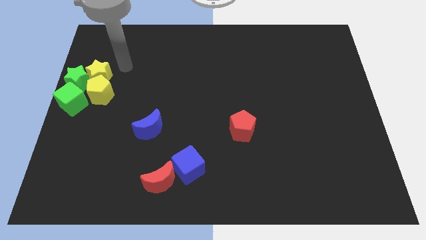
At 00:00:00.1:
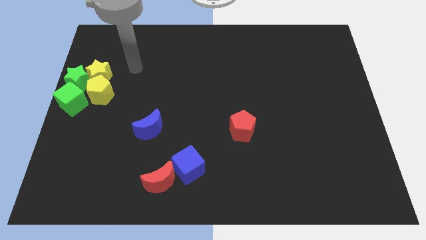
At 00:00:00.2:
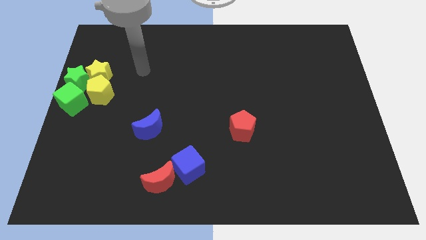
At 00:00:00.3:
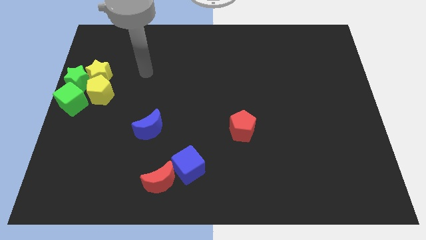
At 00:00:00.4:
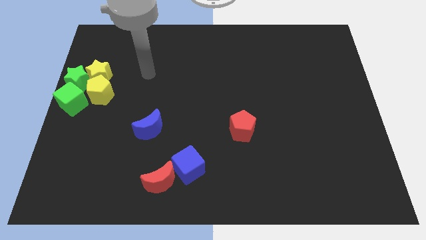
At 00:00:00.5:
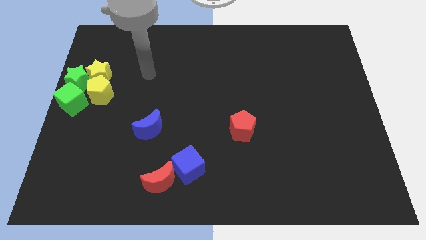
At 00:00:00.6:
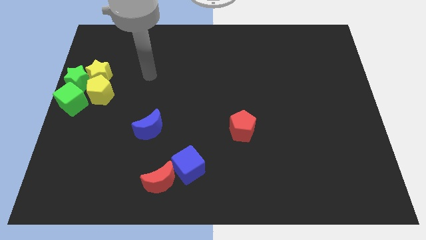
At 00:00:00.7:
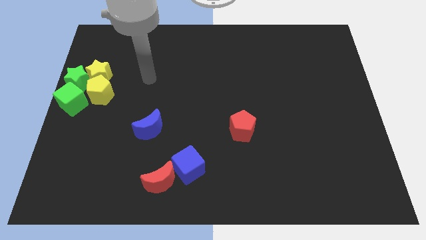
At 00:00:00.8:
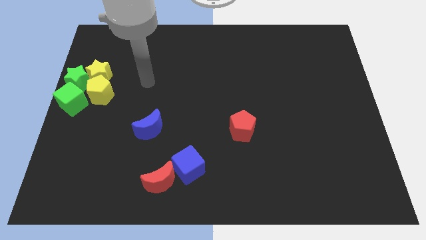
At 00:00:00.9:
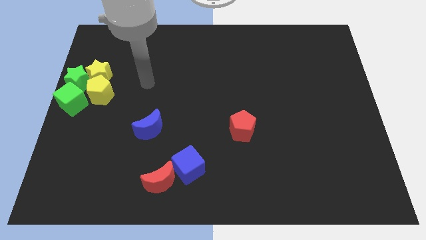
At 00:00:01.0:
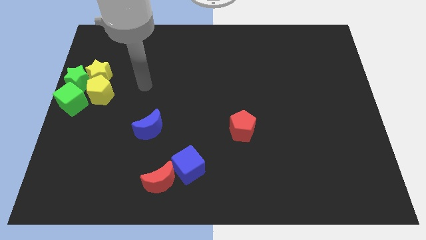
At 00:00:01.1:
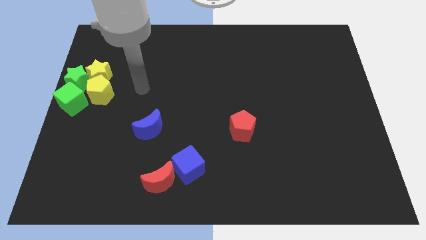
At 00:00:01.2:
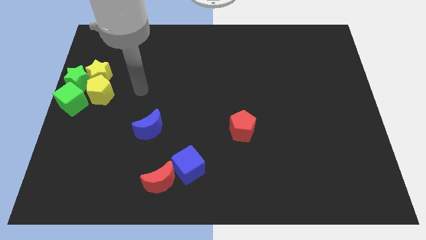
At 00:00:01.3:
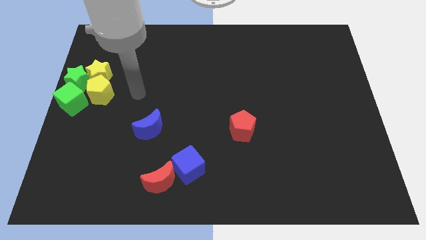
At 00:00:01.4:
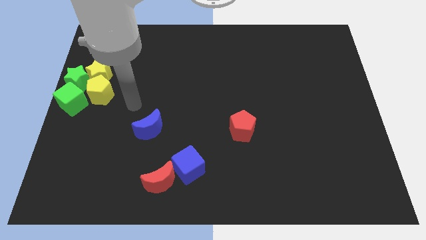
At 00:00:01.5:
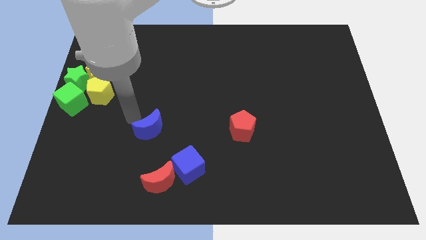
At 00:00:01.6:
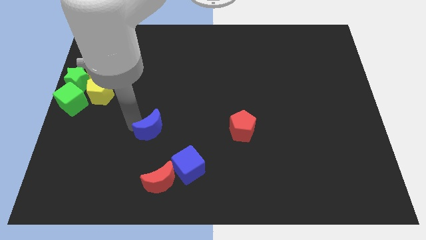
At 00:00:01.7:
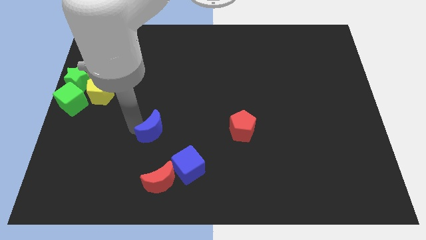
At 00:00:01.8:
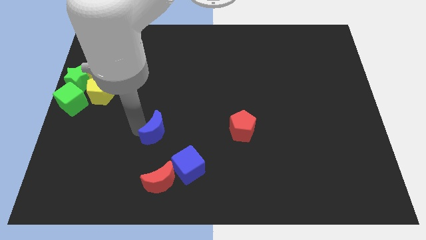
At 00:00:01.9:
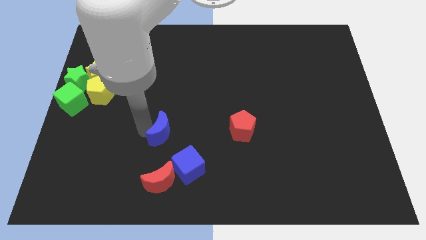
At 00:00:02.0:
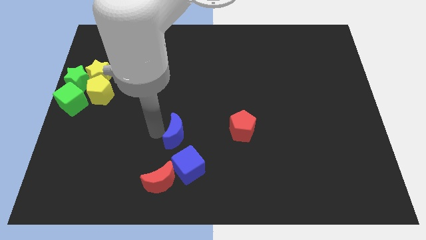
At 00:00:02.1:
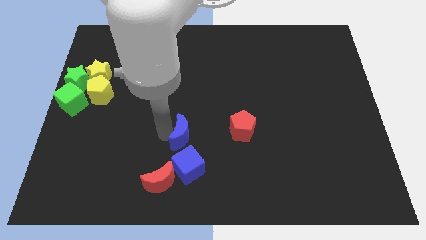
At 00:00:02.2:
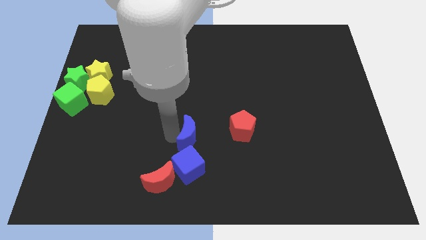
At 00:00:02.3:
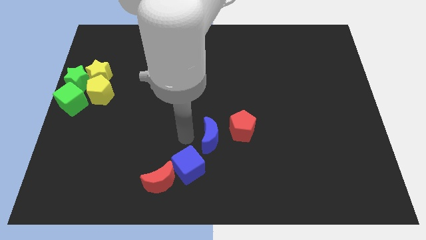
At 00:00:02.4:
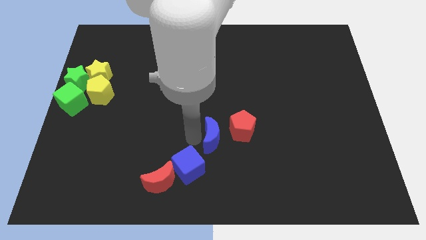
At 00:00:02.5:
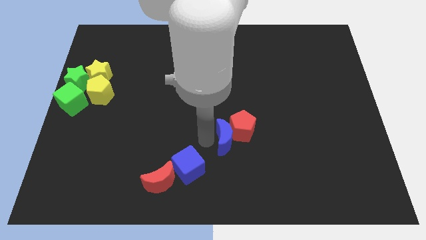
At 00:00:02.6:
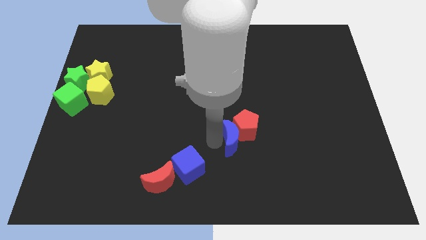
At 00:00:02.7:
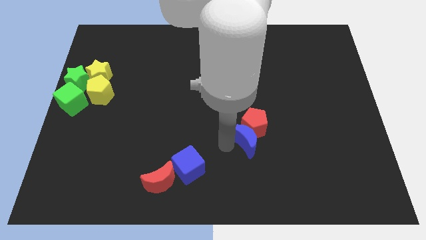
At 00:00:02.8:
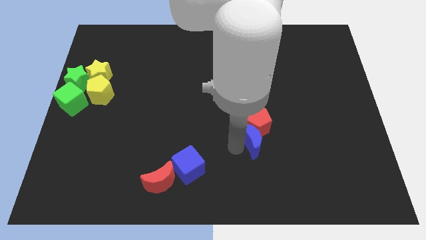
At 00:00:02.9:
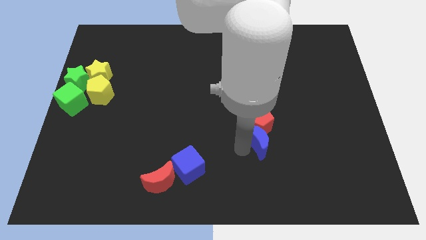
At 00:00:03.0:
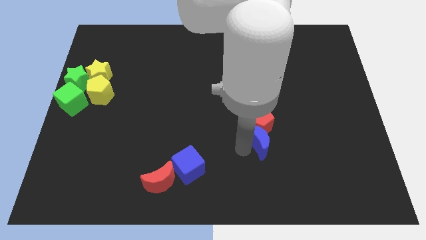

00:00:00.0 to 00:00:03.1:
place blue moon to the bottom of red pentagon

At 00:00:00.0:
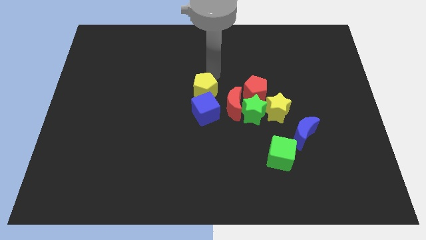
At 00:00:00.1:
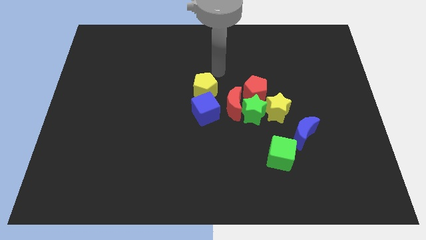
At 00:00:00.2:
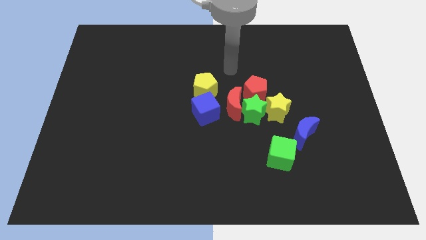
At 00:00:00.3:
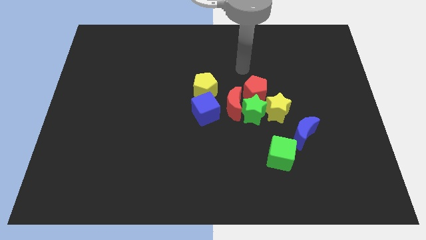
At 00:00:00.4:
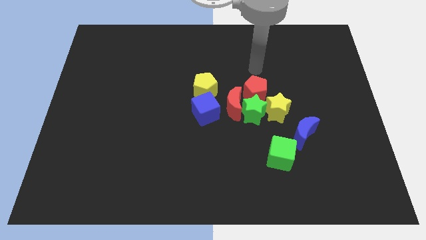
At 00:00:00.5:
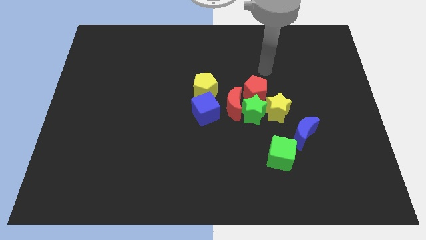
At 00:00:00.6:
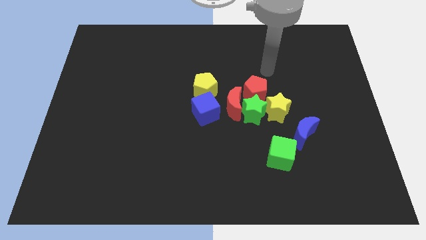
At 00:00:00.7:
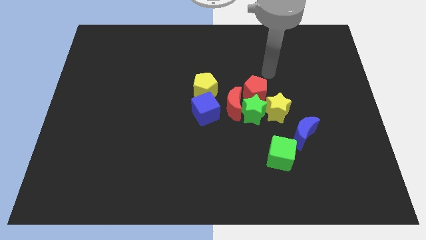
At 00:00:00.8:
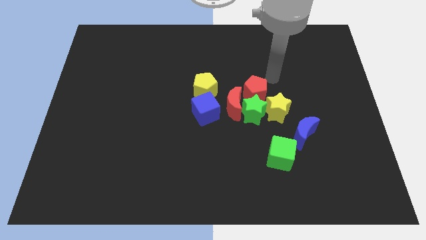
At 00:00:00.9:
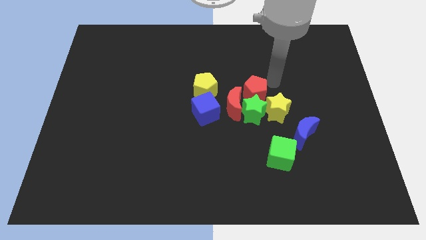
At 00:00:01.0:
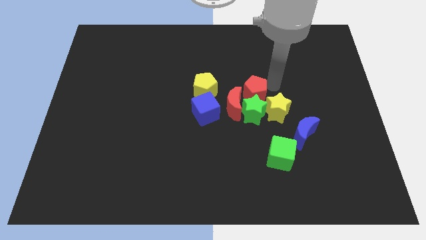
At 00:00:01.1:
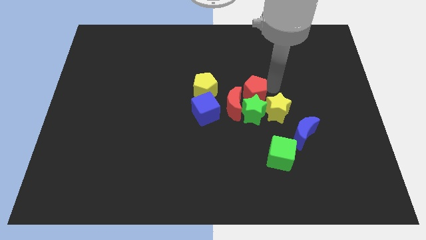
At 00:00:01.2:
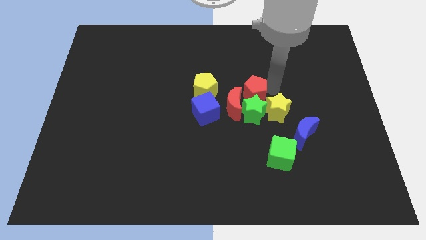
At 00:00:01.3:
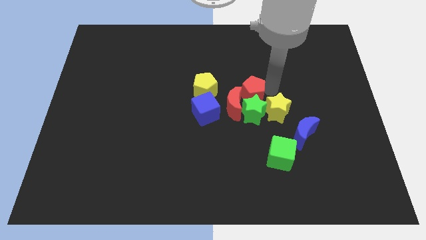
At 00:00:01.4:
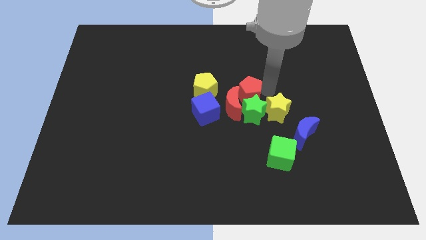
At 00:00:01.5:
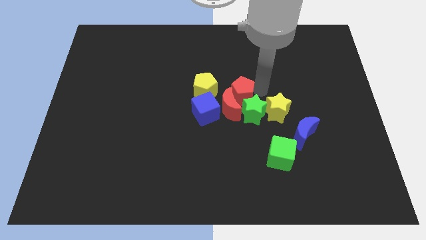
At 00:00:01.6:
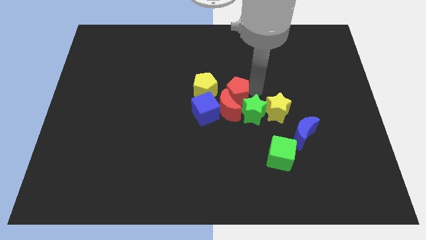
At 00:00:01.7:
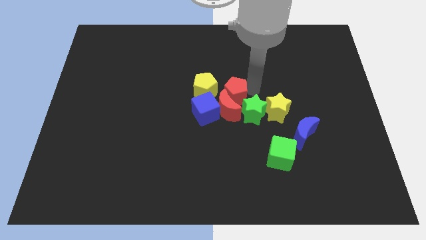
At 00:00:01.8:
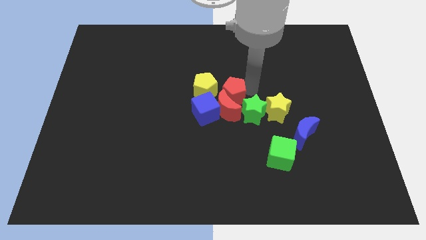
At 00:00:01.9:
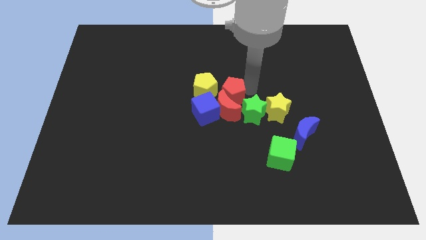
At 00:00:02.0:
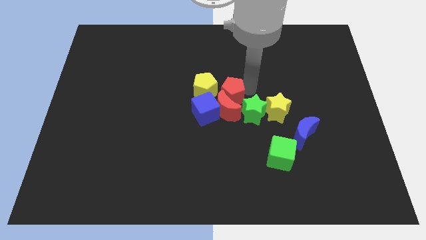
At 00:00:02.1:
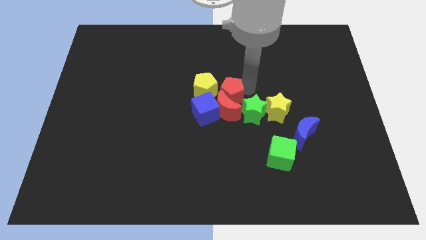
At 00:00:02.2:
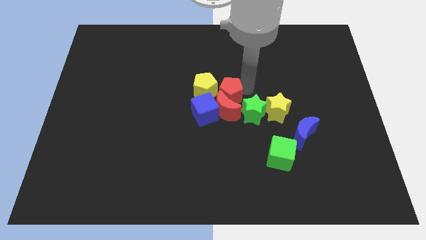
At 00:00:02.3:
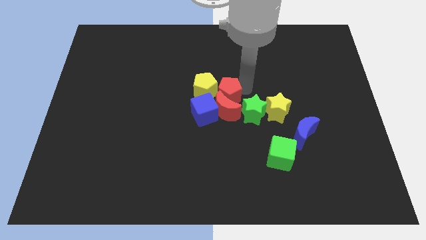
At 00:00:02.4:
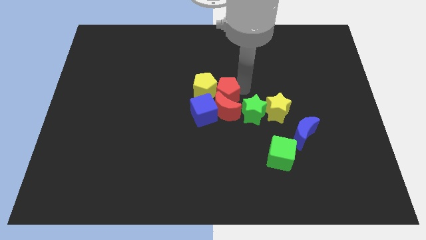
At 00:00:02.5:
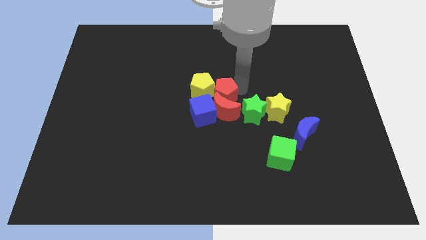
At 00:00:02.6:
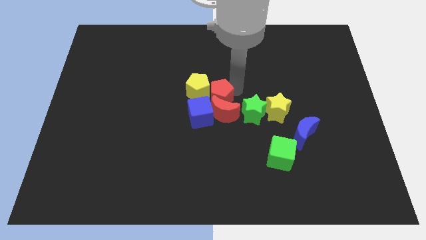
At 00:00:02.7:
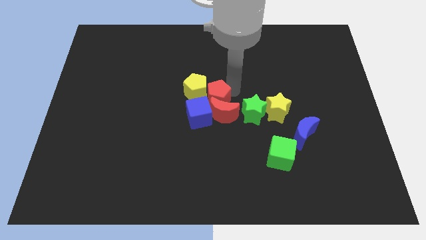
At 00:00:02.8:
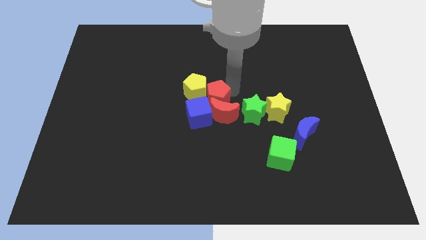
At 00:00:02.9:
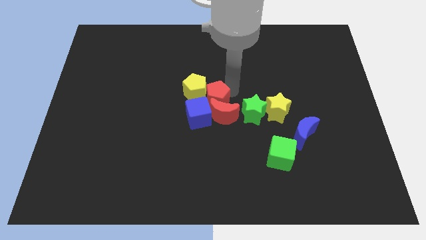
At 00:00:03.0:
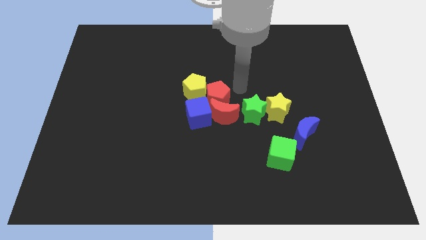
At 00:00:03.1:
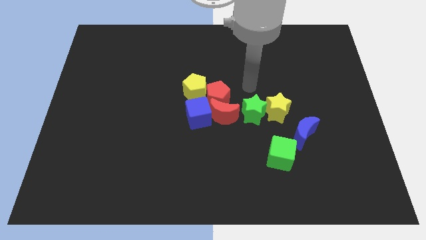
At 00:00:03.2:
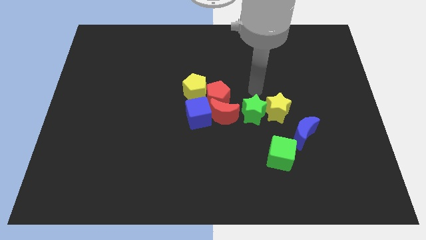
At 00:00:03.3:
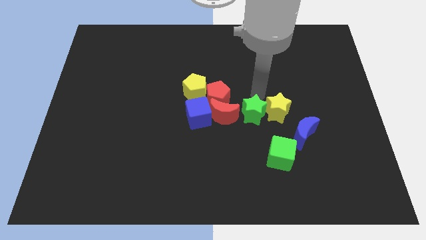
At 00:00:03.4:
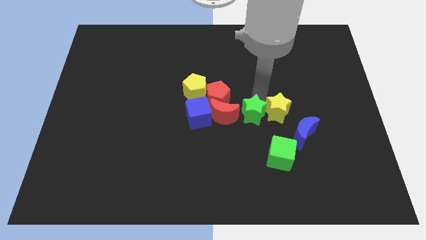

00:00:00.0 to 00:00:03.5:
push the red pentagon into the yellow pentagon

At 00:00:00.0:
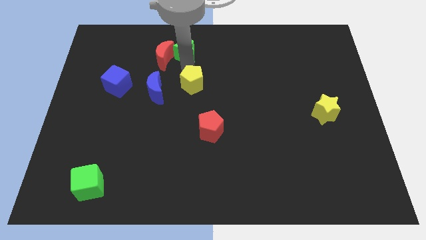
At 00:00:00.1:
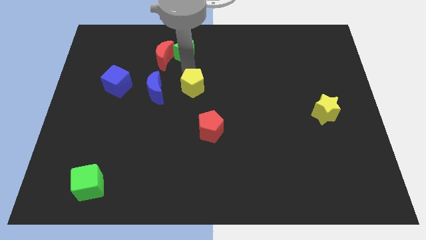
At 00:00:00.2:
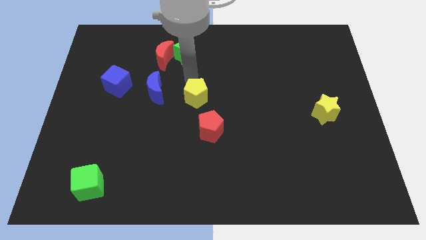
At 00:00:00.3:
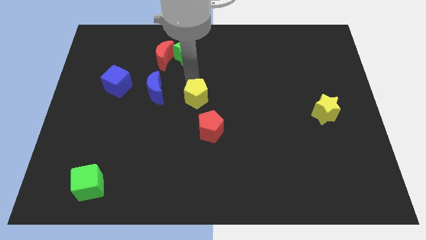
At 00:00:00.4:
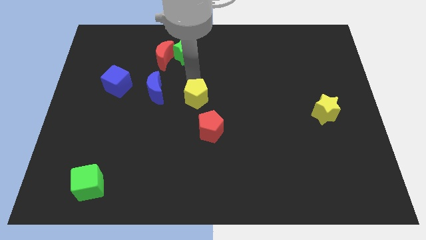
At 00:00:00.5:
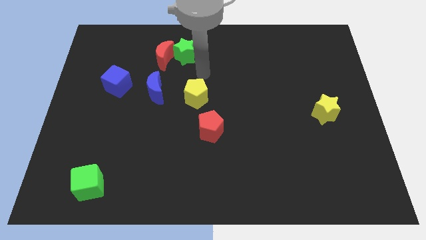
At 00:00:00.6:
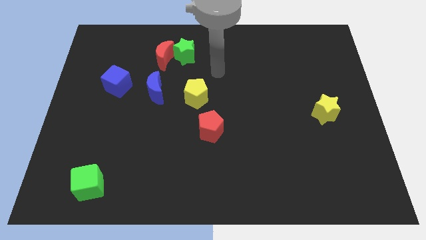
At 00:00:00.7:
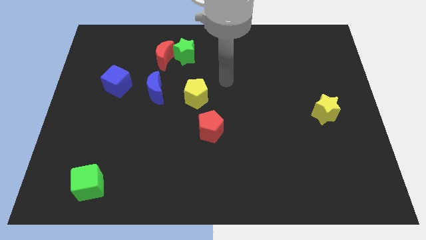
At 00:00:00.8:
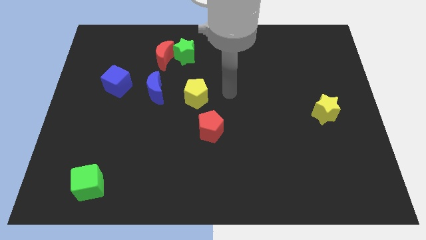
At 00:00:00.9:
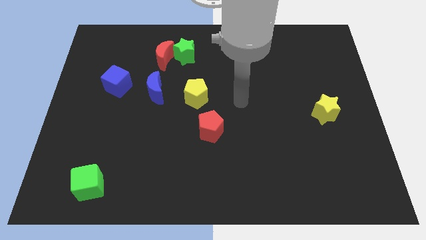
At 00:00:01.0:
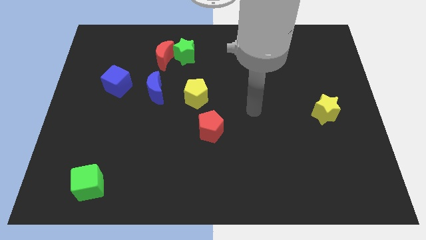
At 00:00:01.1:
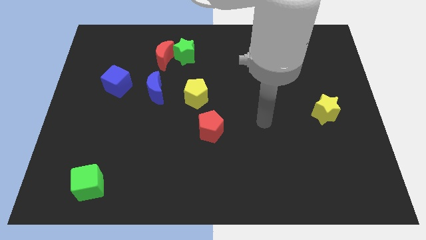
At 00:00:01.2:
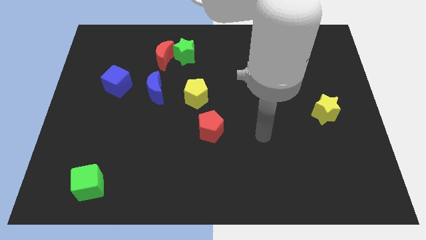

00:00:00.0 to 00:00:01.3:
put the yellow pentagon at the right side of the blue crescent

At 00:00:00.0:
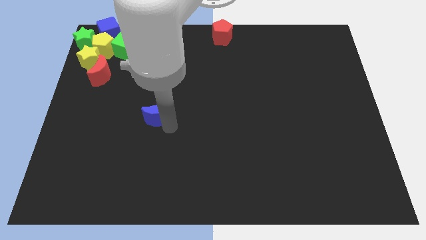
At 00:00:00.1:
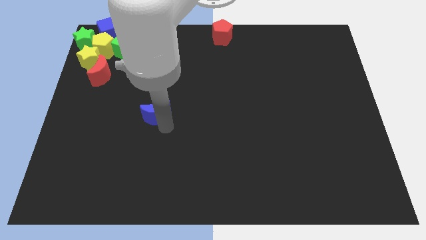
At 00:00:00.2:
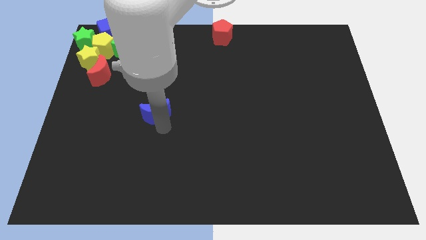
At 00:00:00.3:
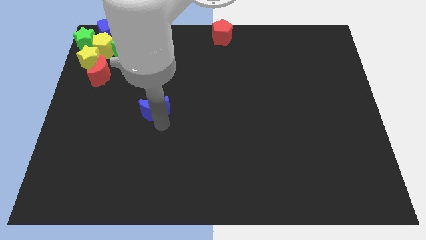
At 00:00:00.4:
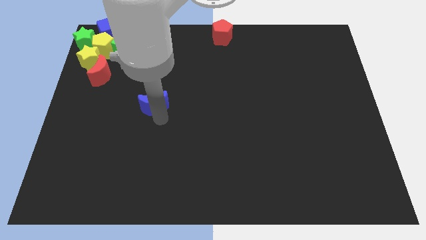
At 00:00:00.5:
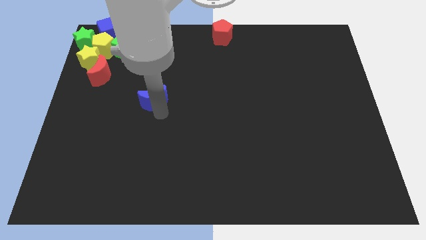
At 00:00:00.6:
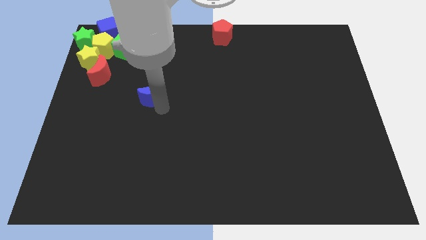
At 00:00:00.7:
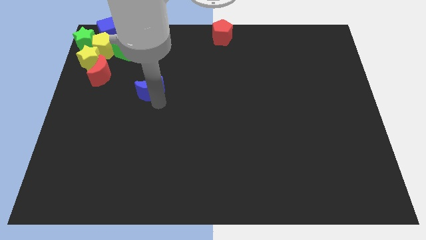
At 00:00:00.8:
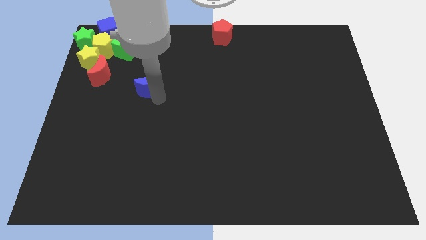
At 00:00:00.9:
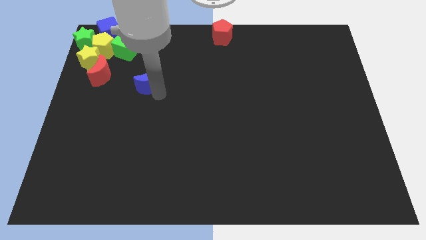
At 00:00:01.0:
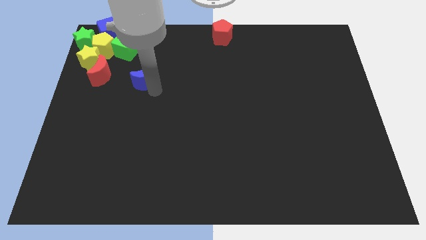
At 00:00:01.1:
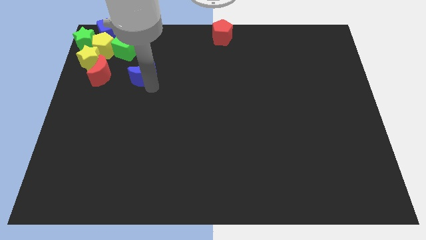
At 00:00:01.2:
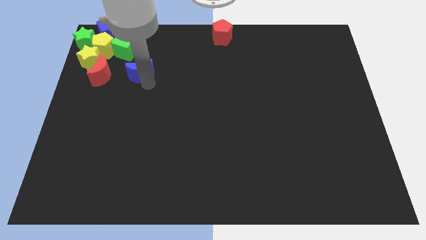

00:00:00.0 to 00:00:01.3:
move the blue crescent towards the green cube
